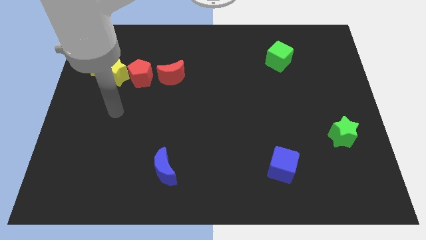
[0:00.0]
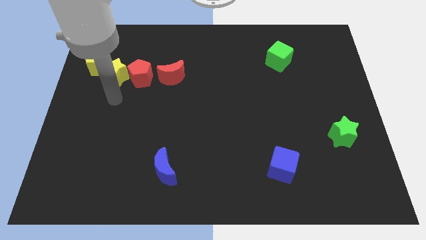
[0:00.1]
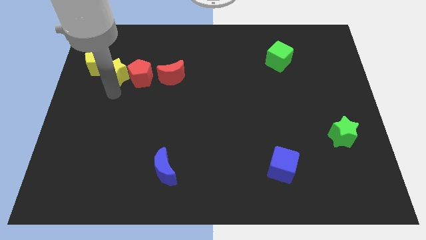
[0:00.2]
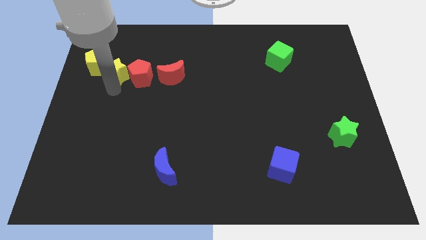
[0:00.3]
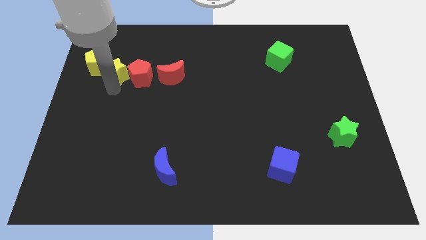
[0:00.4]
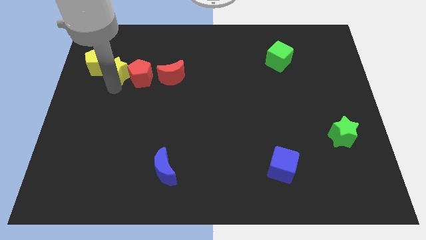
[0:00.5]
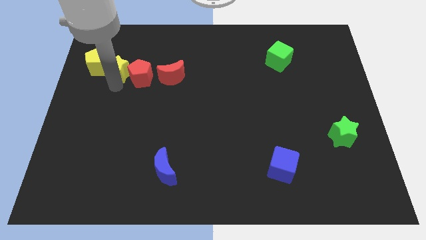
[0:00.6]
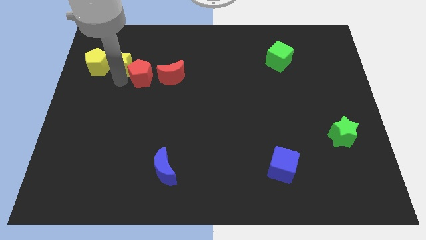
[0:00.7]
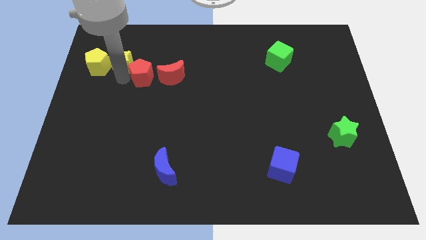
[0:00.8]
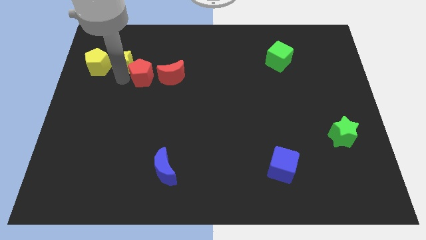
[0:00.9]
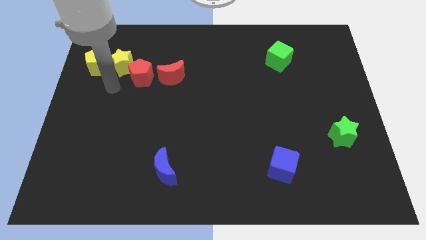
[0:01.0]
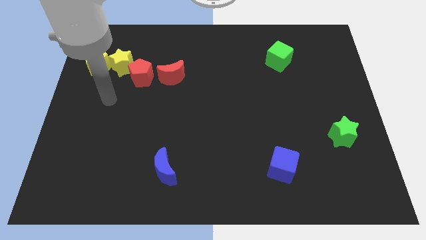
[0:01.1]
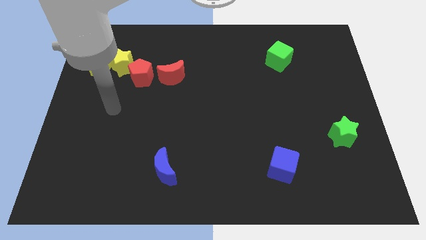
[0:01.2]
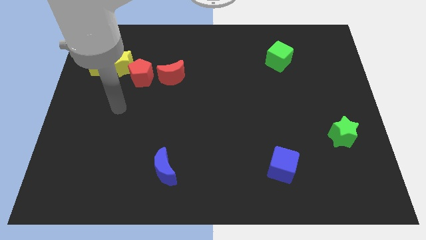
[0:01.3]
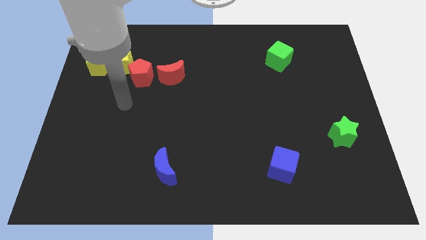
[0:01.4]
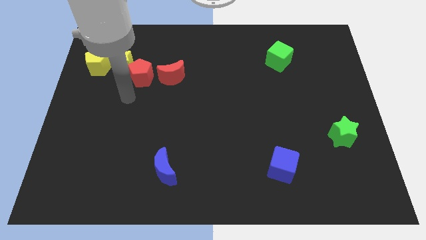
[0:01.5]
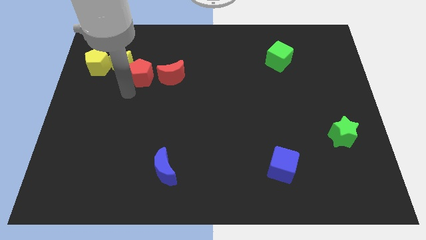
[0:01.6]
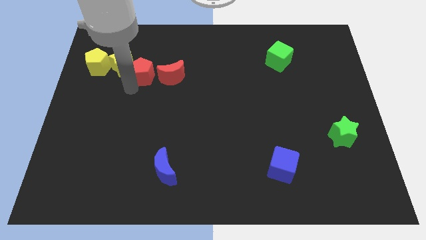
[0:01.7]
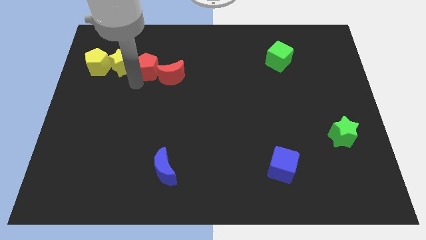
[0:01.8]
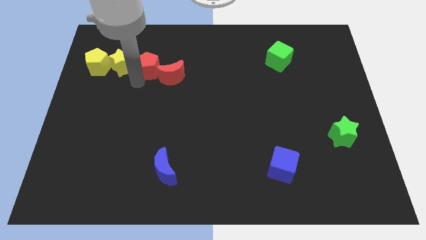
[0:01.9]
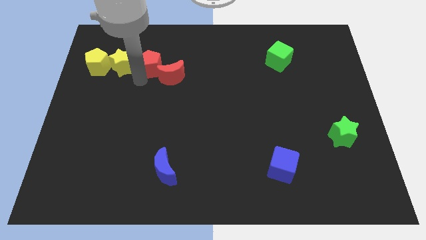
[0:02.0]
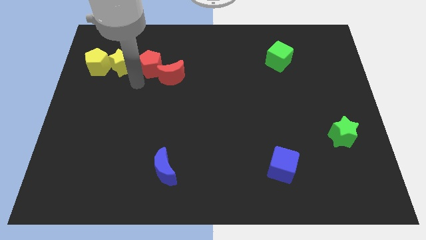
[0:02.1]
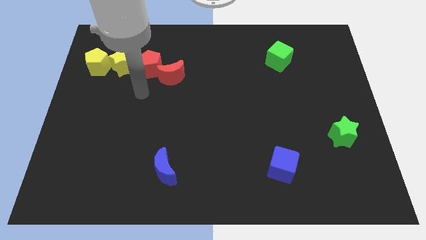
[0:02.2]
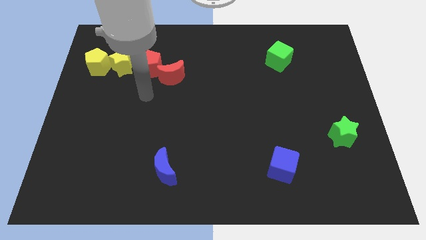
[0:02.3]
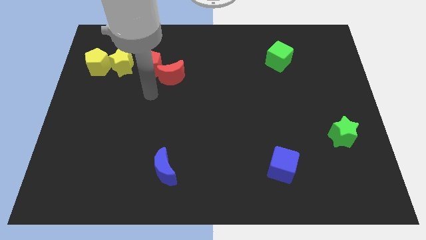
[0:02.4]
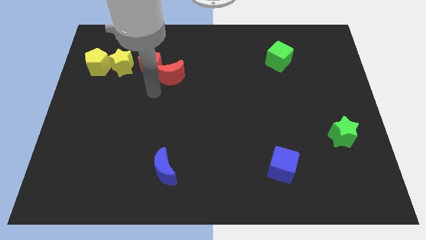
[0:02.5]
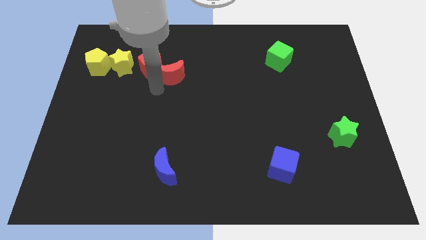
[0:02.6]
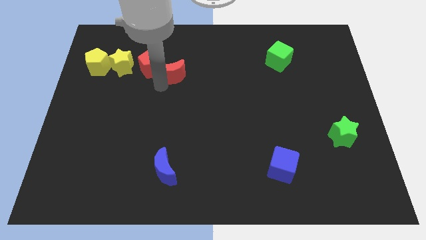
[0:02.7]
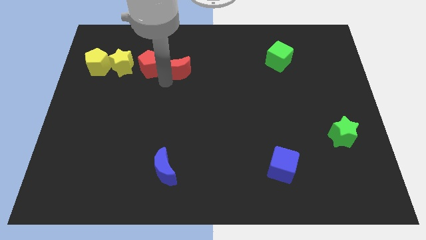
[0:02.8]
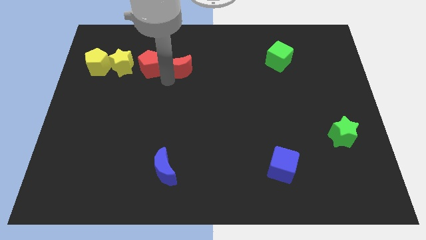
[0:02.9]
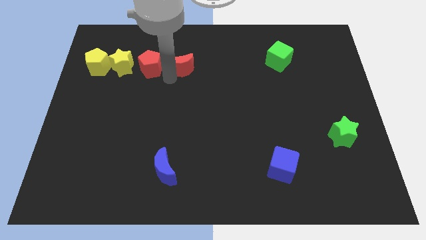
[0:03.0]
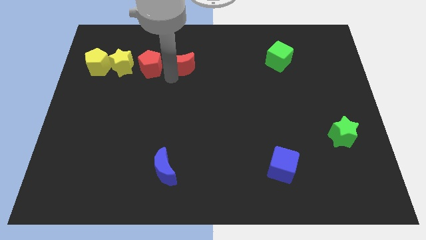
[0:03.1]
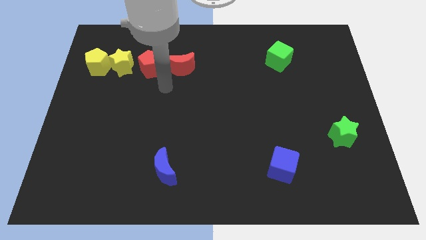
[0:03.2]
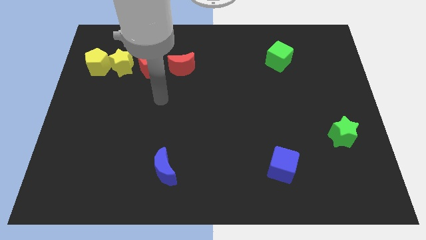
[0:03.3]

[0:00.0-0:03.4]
adjust the yellow star red pentagon and red moon in a horizontal line with the yellow pentagon

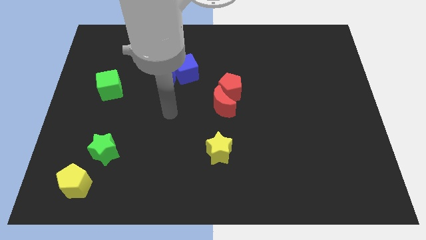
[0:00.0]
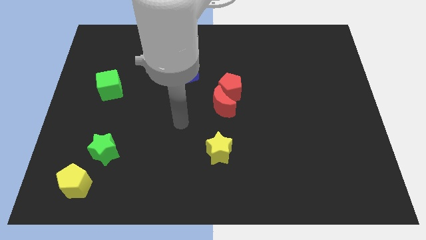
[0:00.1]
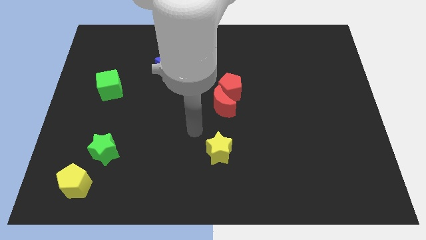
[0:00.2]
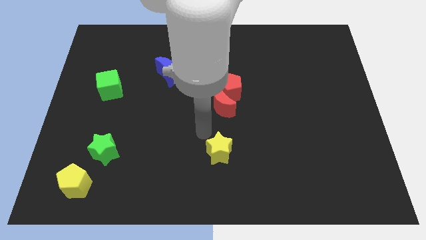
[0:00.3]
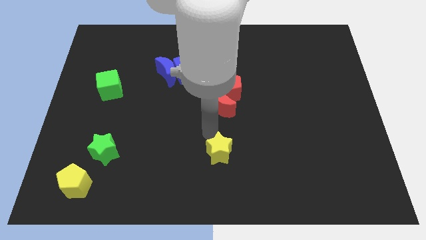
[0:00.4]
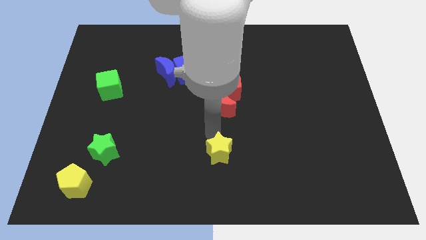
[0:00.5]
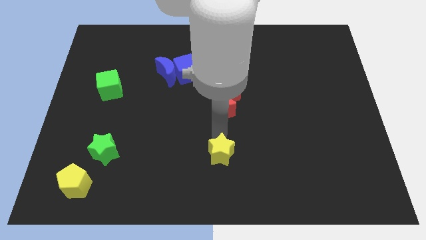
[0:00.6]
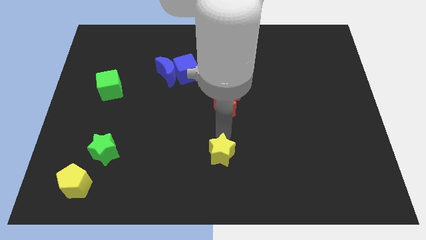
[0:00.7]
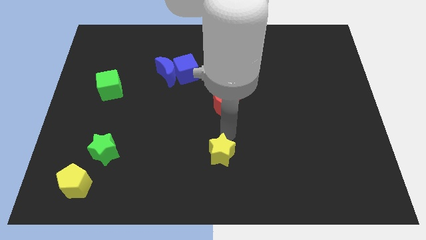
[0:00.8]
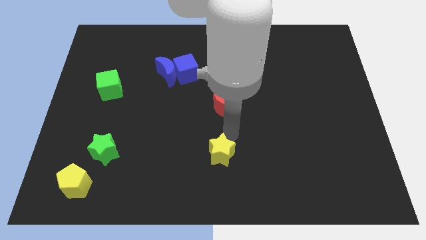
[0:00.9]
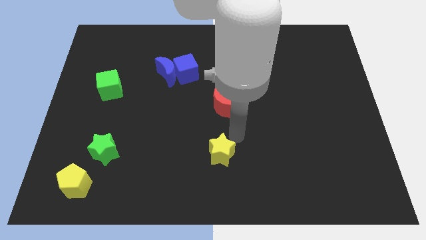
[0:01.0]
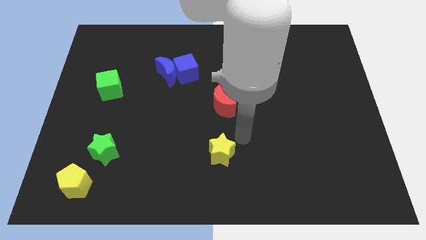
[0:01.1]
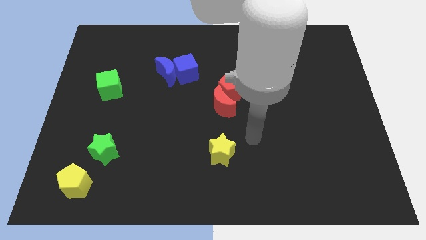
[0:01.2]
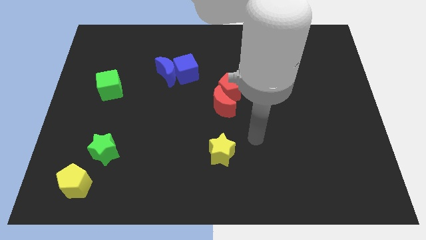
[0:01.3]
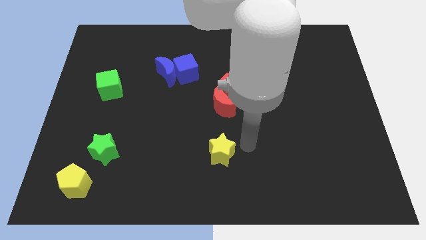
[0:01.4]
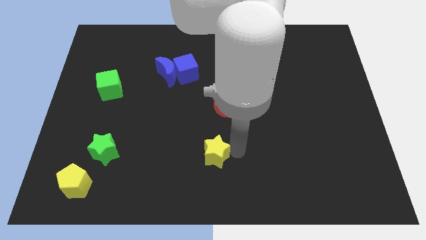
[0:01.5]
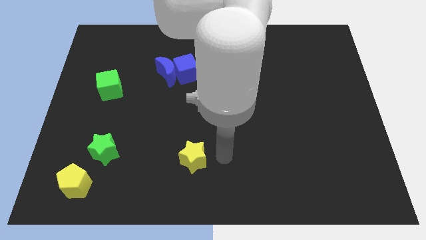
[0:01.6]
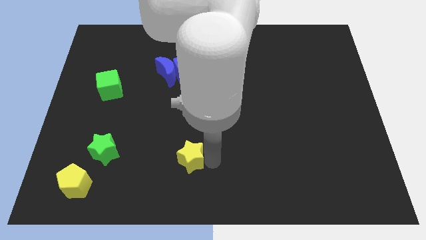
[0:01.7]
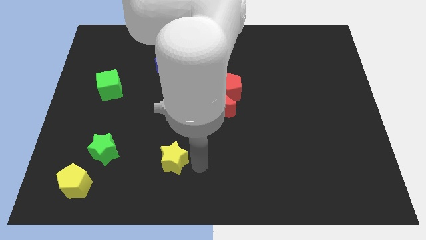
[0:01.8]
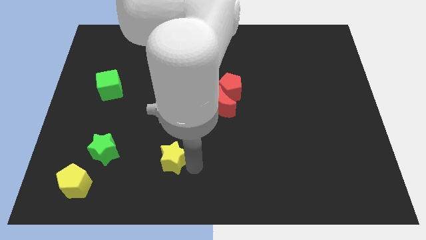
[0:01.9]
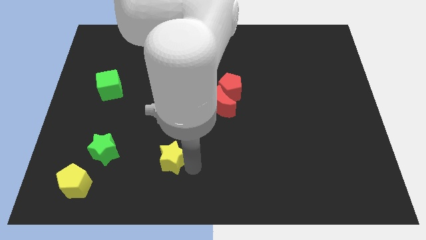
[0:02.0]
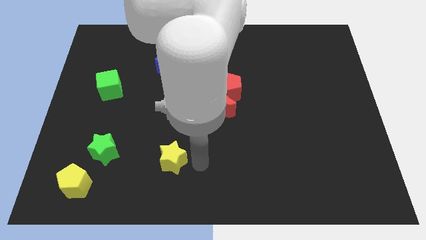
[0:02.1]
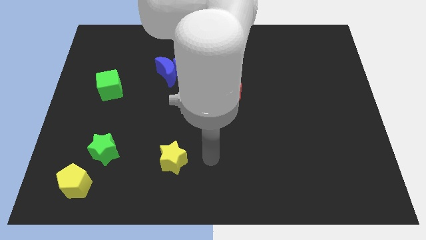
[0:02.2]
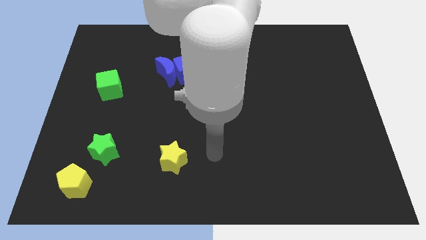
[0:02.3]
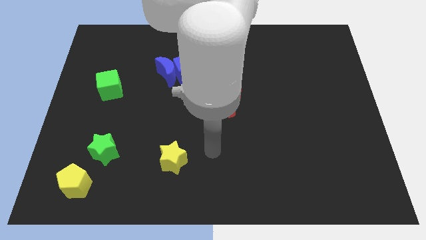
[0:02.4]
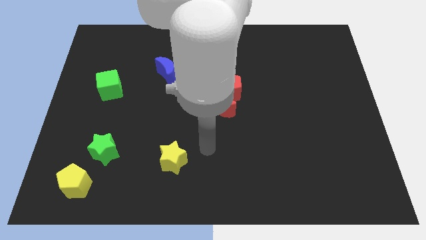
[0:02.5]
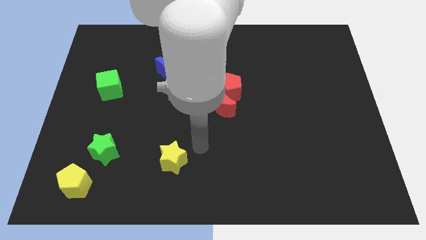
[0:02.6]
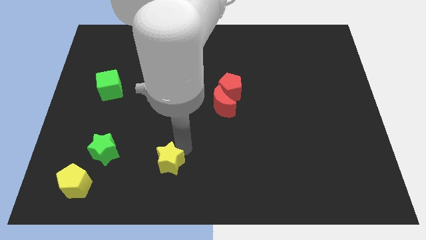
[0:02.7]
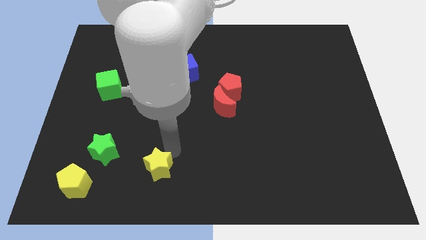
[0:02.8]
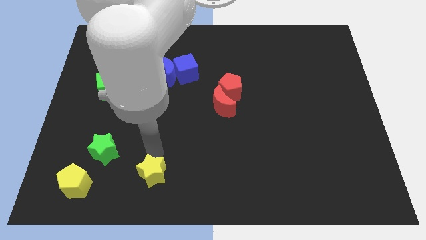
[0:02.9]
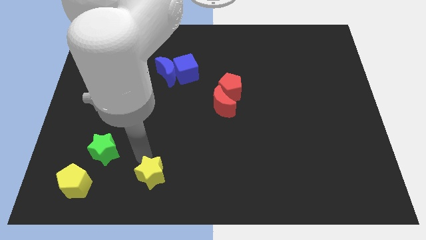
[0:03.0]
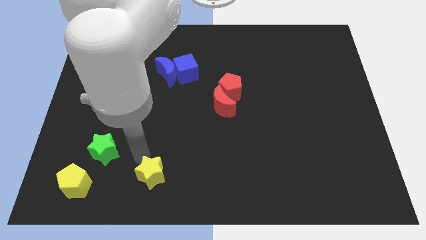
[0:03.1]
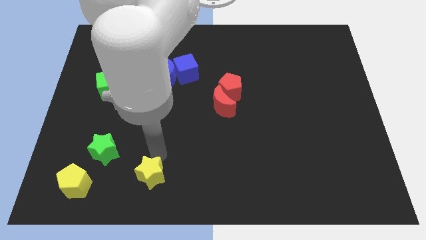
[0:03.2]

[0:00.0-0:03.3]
drag the yellow star towards the yellow pentagon

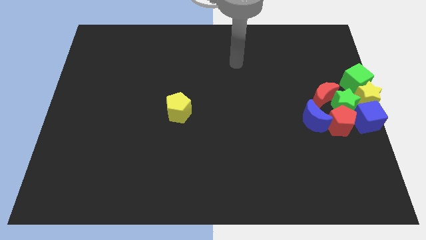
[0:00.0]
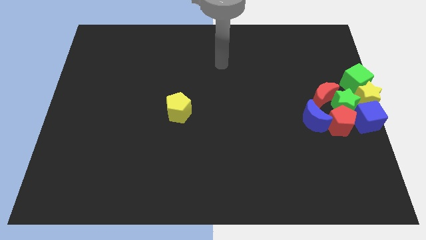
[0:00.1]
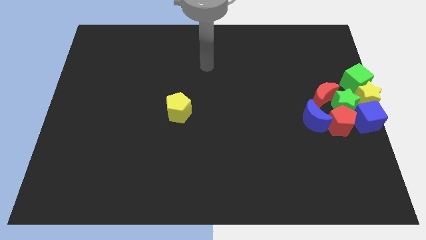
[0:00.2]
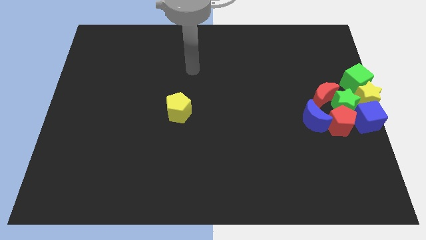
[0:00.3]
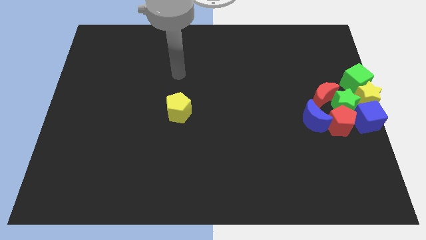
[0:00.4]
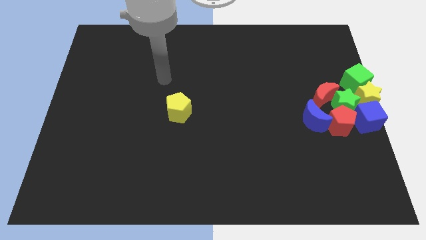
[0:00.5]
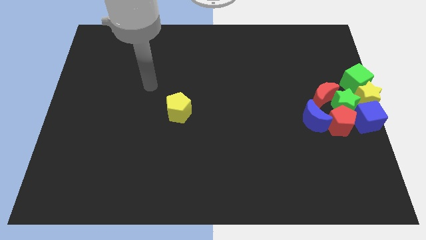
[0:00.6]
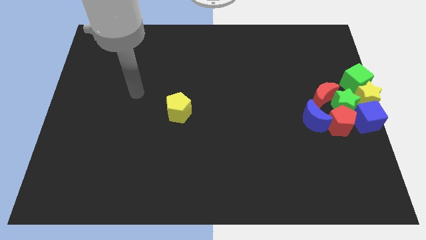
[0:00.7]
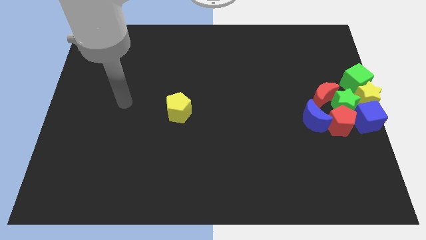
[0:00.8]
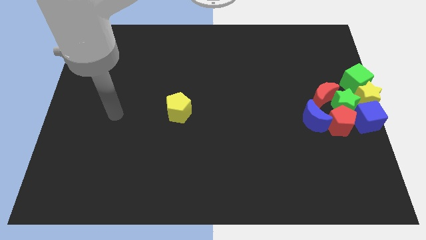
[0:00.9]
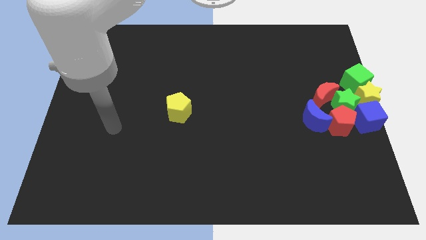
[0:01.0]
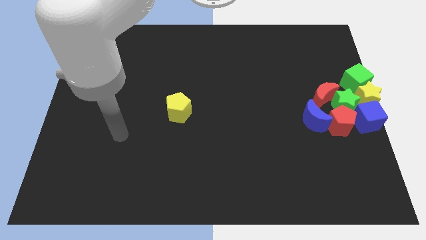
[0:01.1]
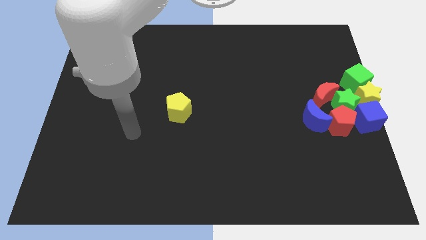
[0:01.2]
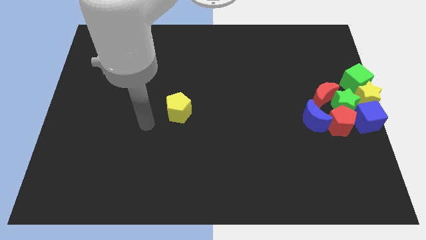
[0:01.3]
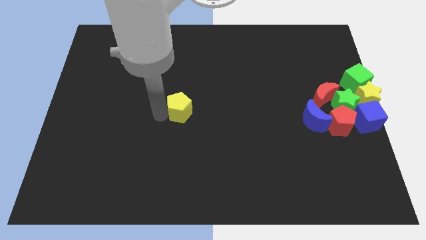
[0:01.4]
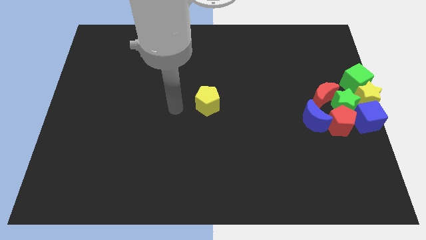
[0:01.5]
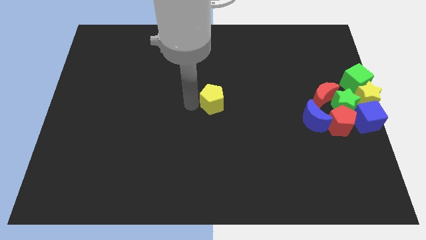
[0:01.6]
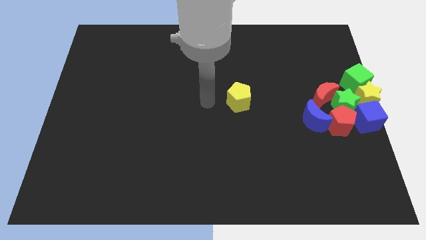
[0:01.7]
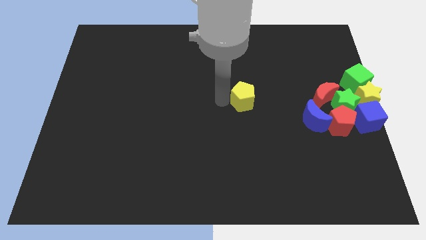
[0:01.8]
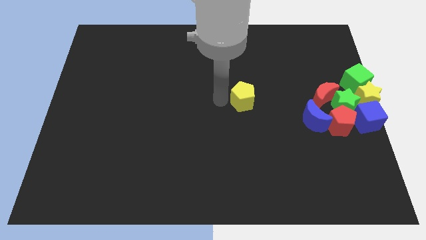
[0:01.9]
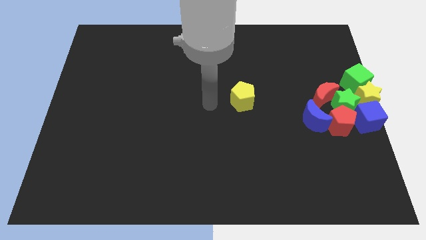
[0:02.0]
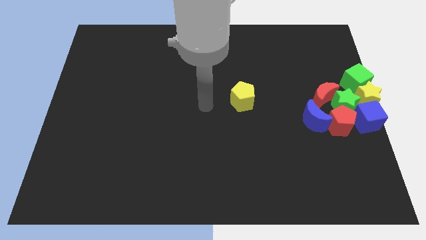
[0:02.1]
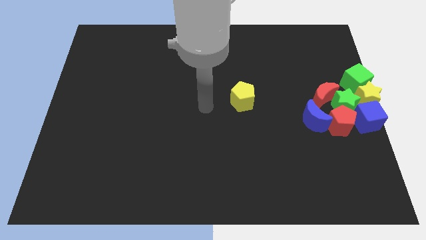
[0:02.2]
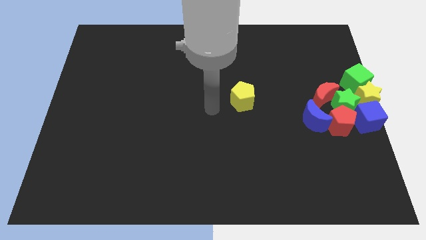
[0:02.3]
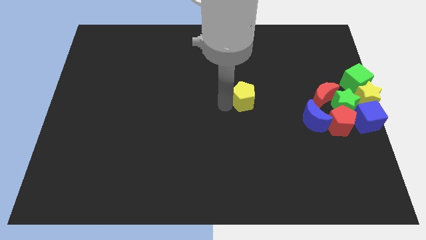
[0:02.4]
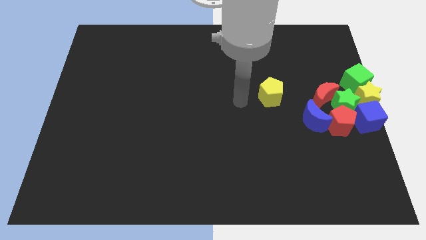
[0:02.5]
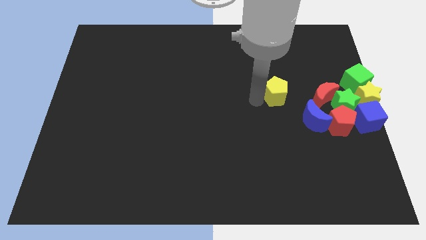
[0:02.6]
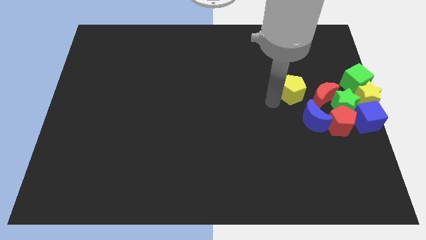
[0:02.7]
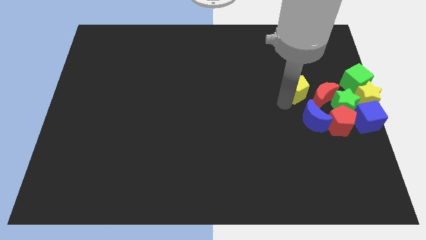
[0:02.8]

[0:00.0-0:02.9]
push yellow pentagon to right side
